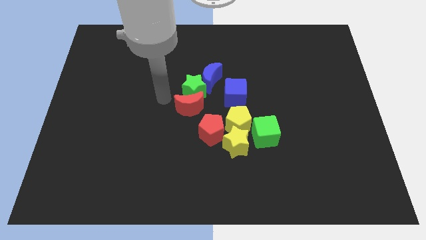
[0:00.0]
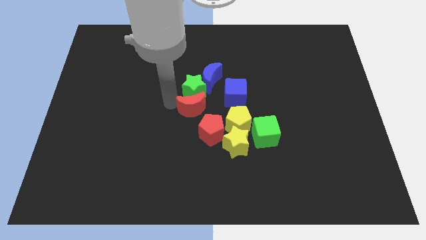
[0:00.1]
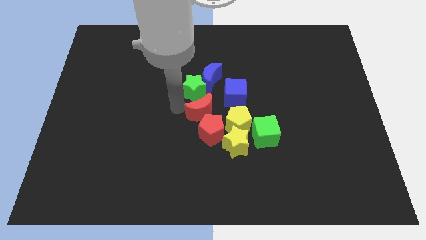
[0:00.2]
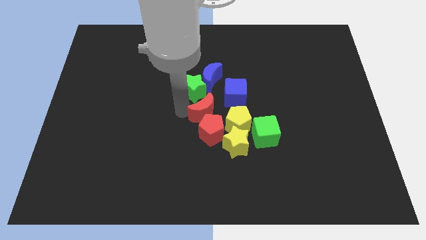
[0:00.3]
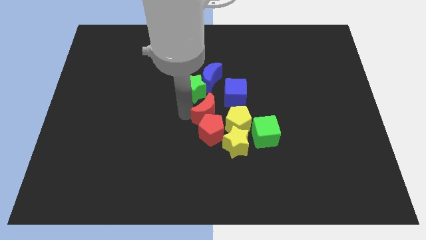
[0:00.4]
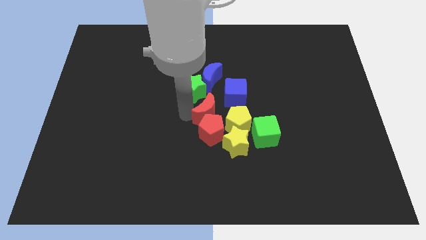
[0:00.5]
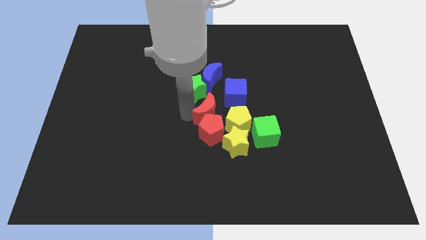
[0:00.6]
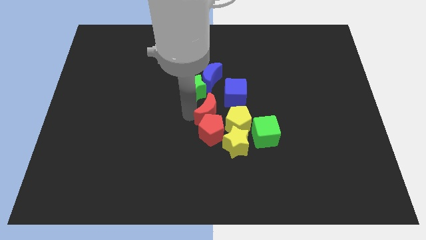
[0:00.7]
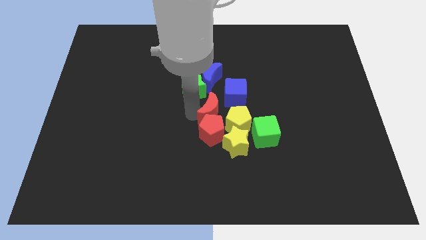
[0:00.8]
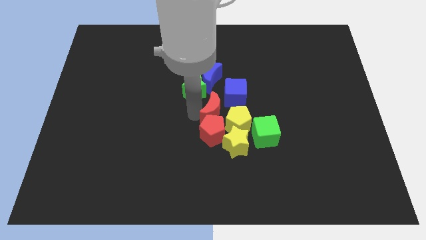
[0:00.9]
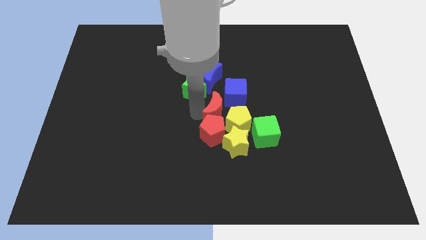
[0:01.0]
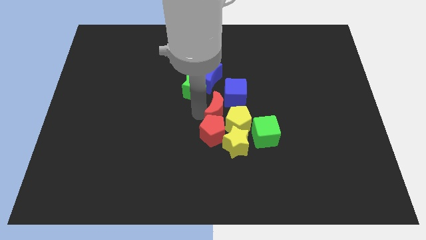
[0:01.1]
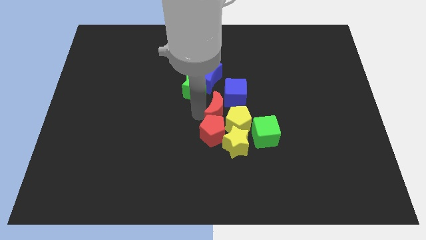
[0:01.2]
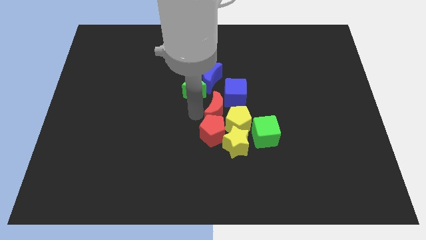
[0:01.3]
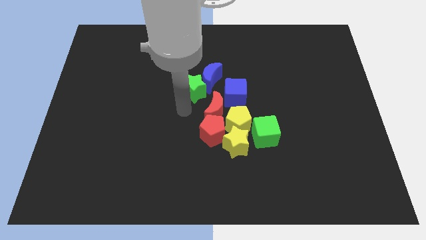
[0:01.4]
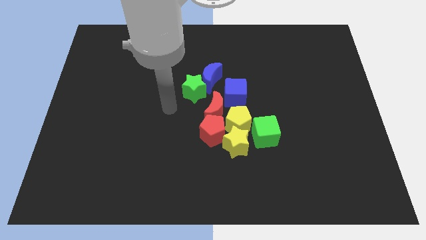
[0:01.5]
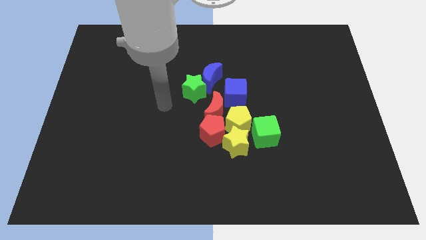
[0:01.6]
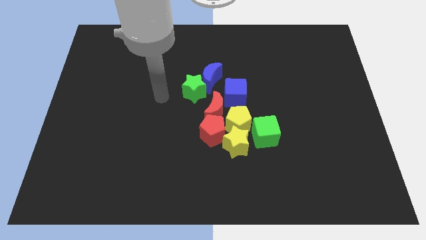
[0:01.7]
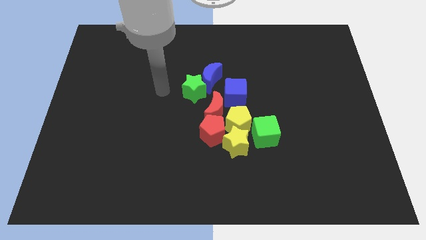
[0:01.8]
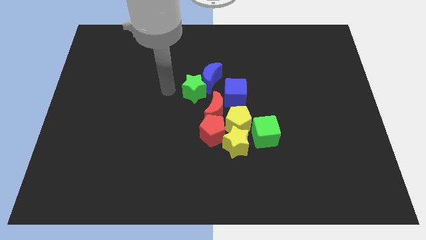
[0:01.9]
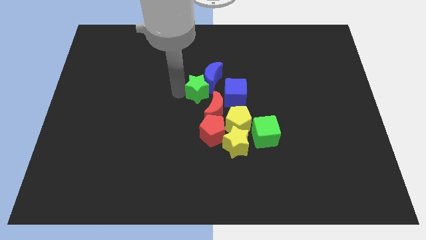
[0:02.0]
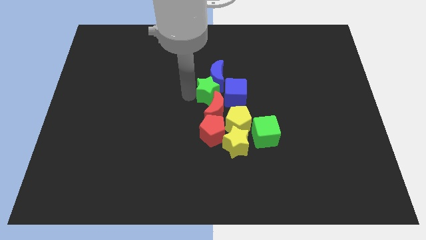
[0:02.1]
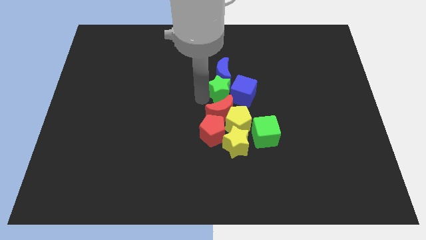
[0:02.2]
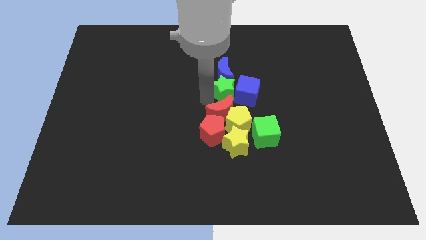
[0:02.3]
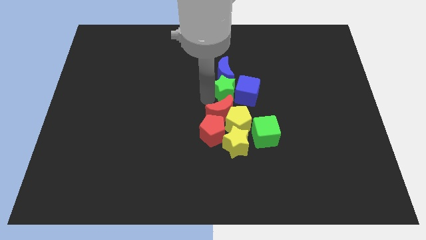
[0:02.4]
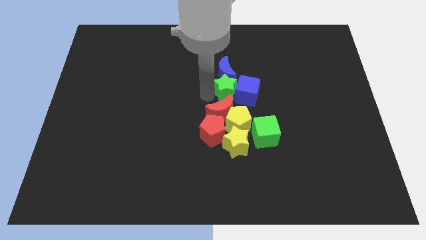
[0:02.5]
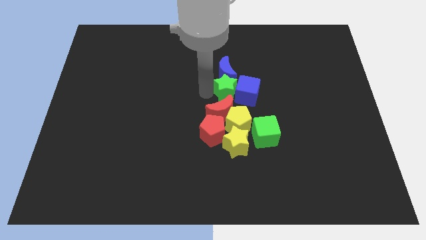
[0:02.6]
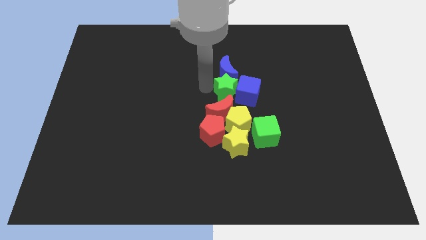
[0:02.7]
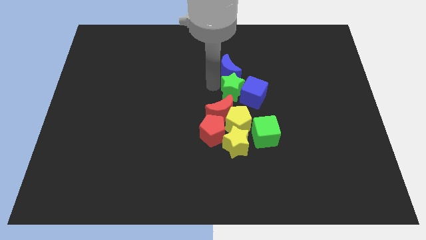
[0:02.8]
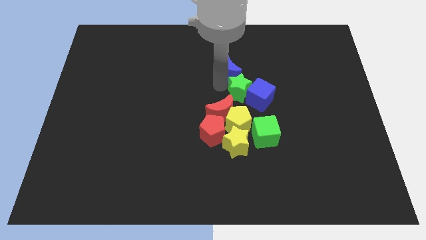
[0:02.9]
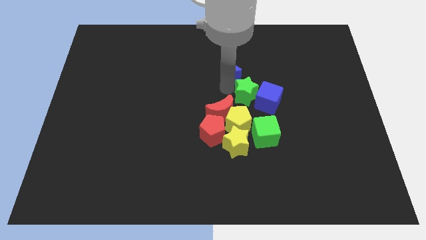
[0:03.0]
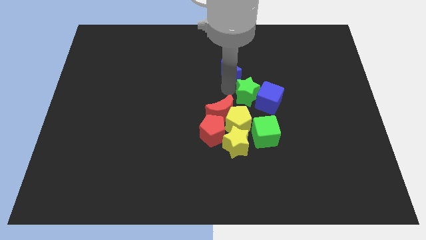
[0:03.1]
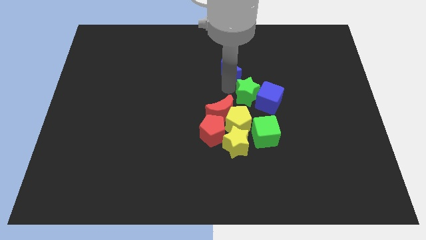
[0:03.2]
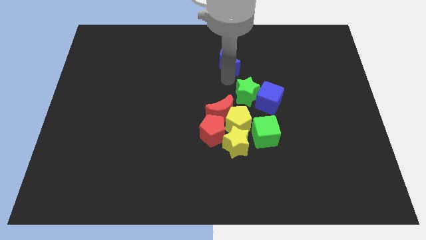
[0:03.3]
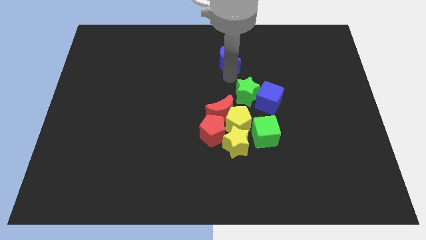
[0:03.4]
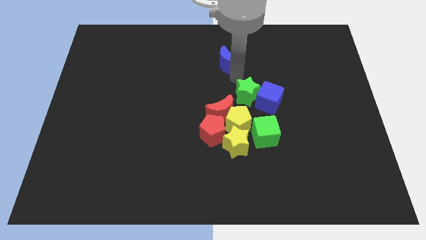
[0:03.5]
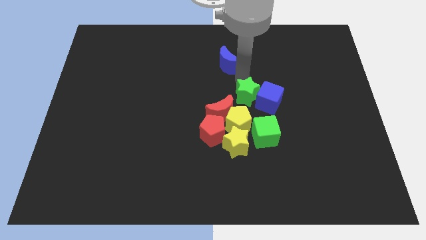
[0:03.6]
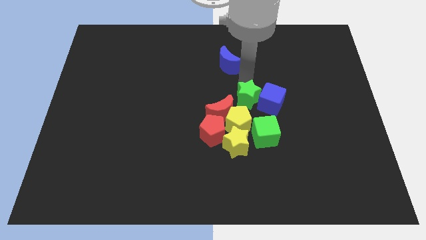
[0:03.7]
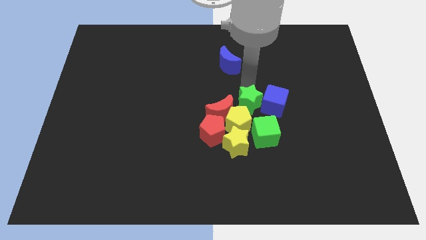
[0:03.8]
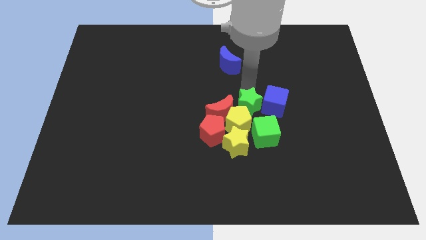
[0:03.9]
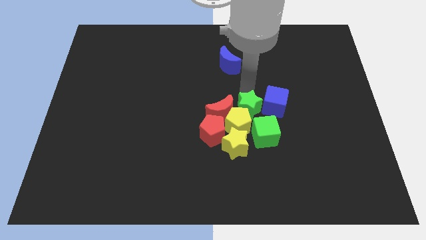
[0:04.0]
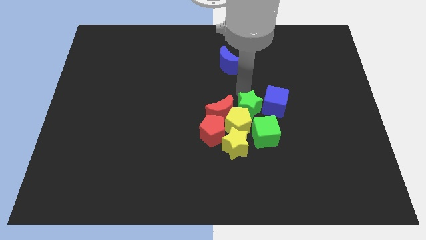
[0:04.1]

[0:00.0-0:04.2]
move the red moon and the green star into the group of blocks

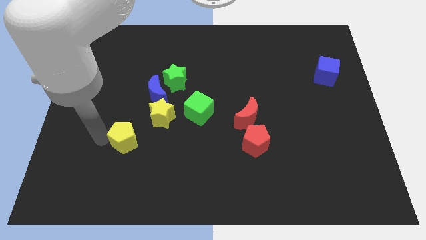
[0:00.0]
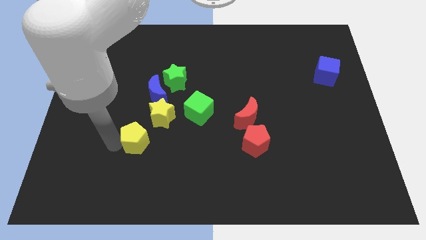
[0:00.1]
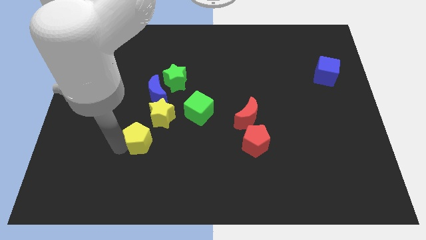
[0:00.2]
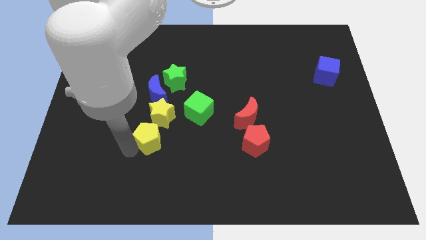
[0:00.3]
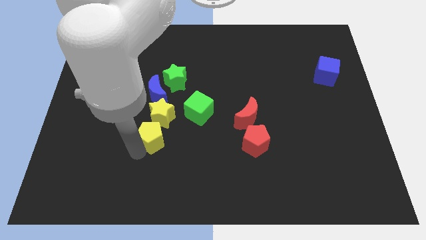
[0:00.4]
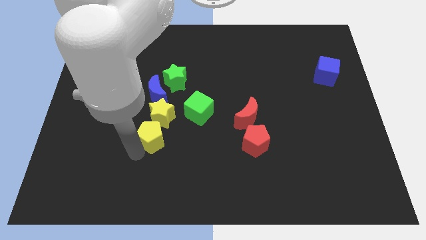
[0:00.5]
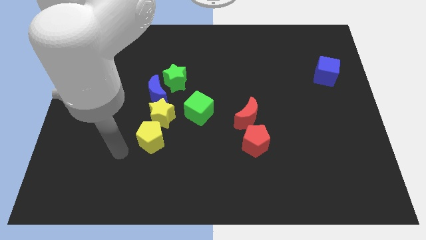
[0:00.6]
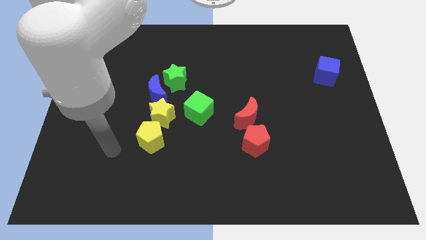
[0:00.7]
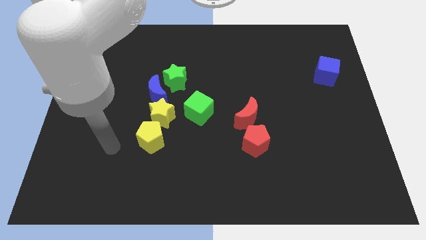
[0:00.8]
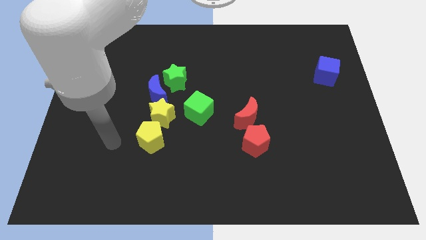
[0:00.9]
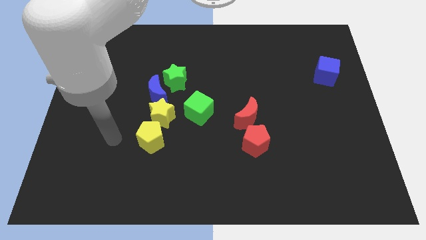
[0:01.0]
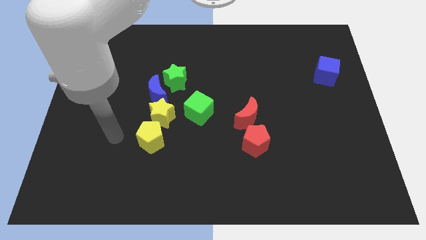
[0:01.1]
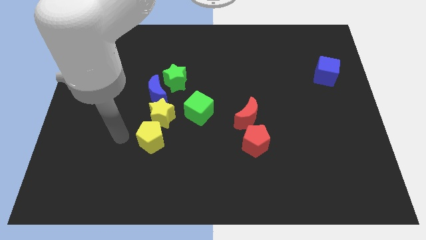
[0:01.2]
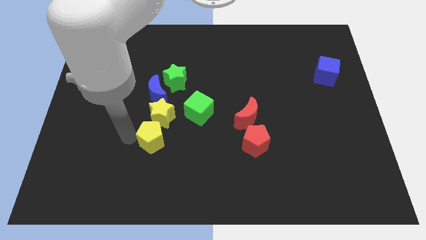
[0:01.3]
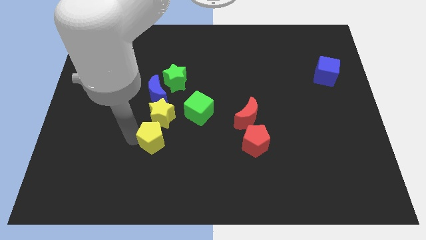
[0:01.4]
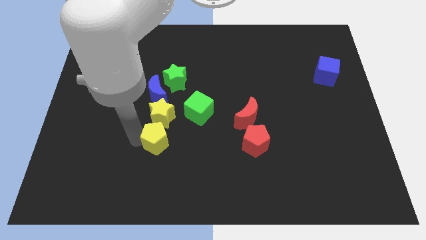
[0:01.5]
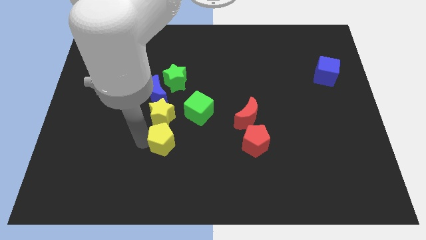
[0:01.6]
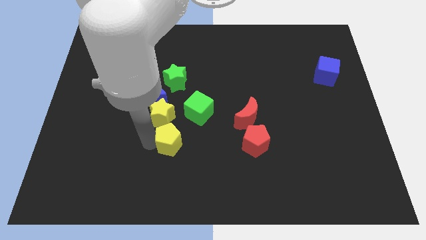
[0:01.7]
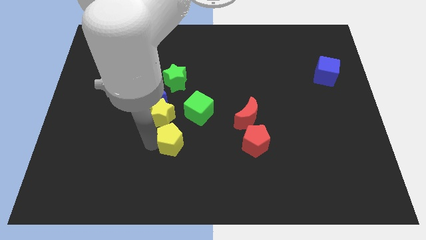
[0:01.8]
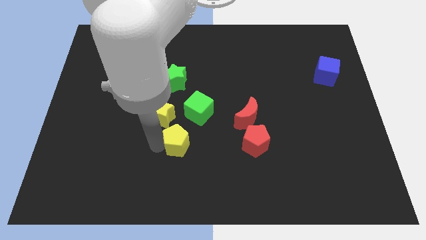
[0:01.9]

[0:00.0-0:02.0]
push the yellow pentagon towards the red pentagon

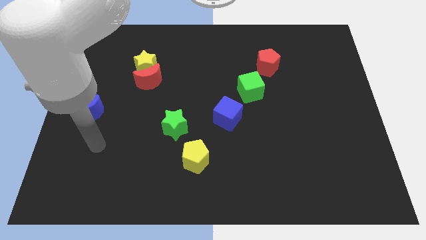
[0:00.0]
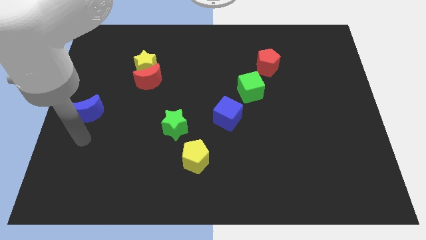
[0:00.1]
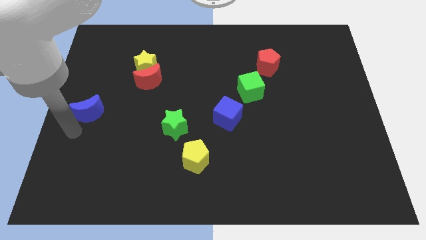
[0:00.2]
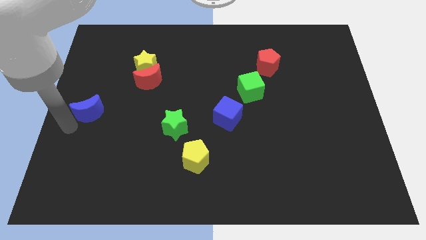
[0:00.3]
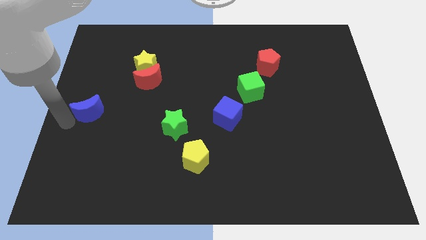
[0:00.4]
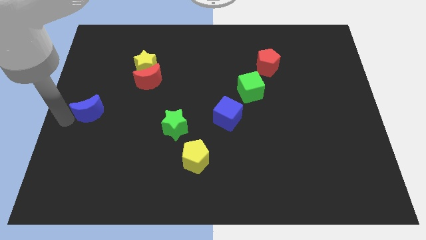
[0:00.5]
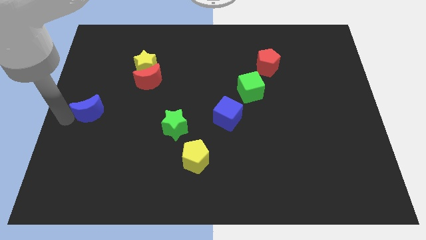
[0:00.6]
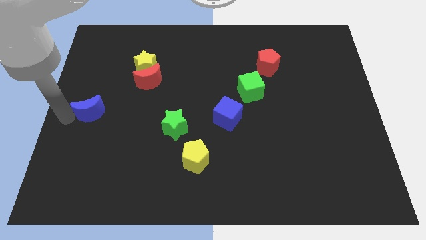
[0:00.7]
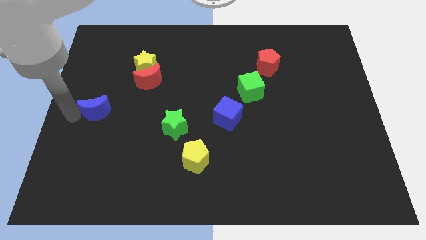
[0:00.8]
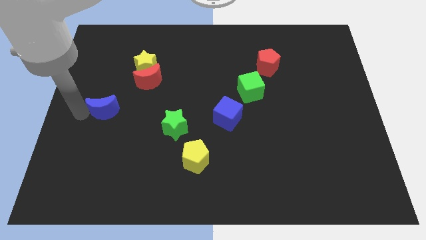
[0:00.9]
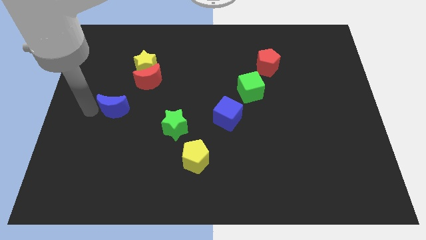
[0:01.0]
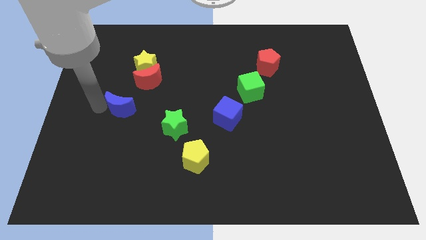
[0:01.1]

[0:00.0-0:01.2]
push the blue crescent towards the red crescent

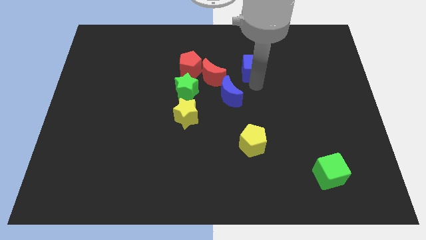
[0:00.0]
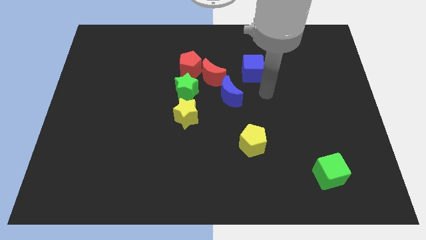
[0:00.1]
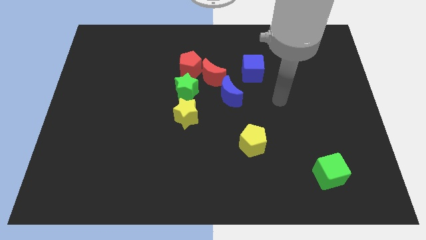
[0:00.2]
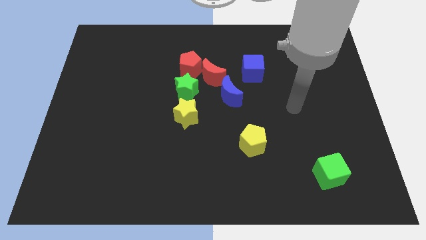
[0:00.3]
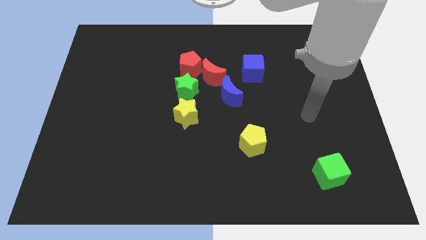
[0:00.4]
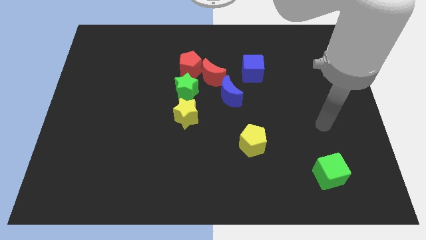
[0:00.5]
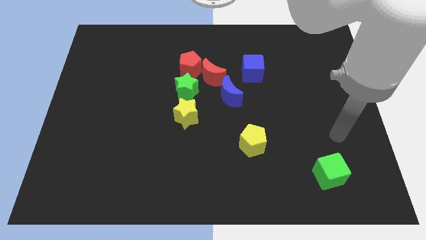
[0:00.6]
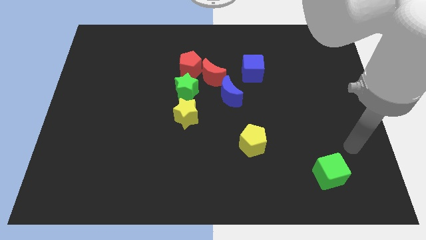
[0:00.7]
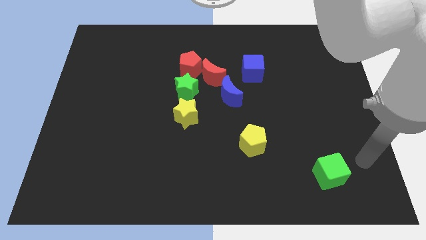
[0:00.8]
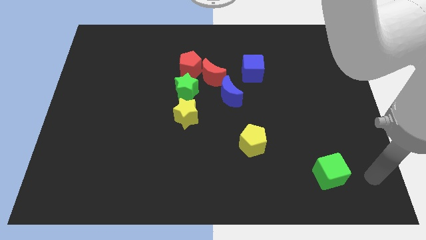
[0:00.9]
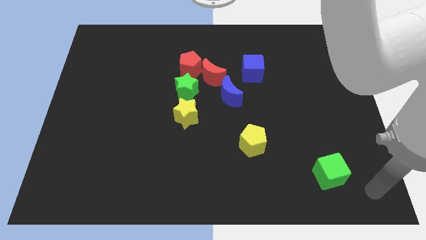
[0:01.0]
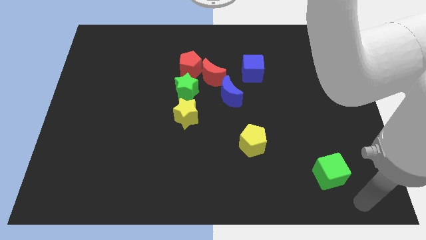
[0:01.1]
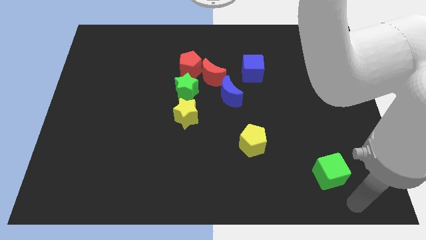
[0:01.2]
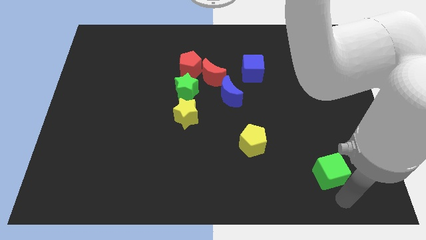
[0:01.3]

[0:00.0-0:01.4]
point your arm towards the bottom right side of the green cube

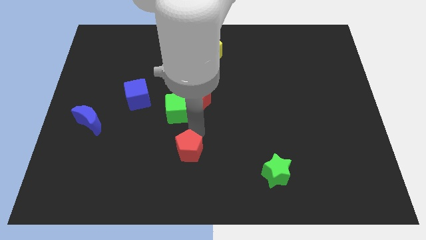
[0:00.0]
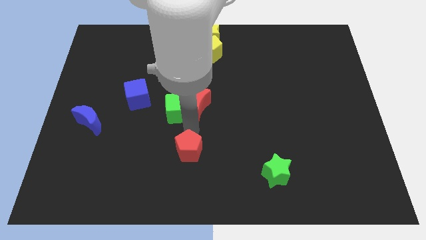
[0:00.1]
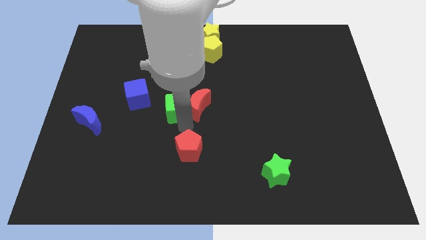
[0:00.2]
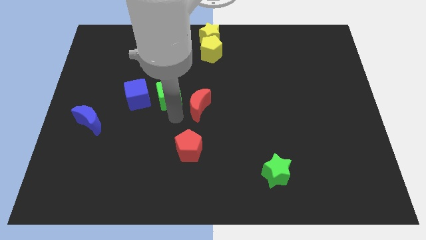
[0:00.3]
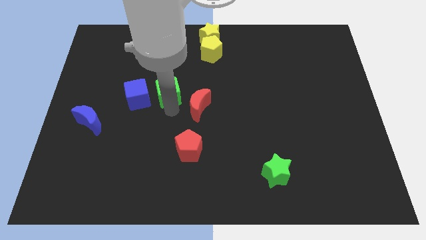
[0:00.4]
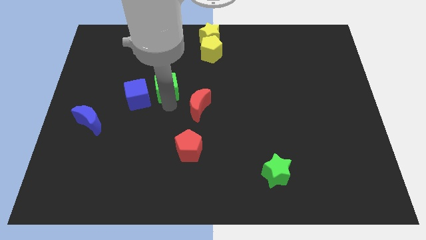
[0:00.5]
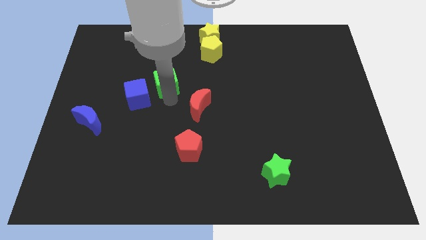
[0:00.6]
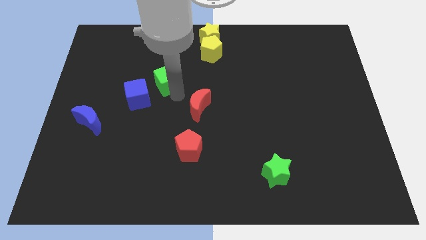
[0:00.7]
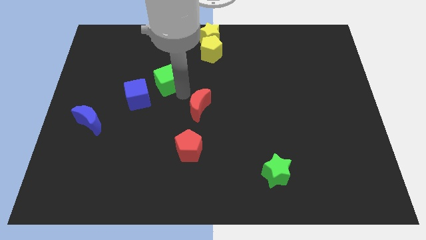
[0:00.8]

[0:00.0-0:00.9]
move the green cube to the right of the blue cube
